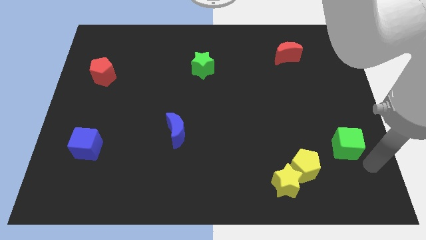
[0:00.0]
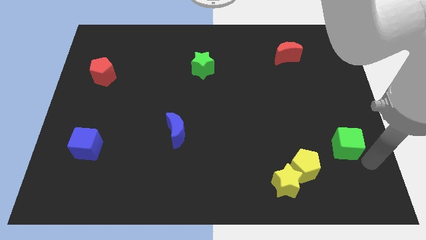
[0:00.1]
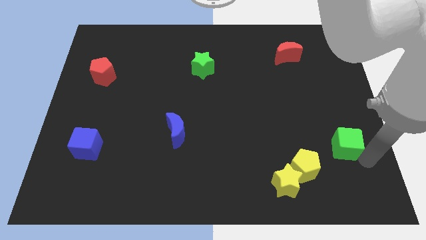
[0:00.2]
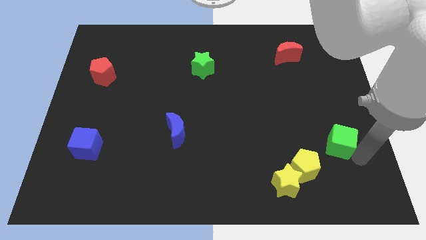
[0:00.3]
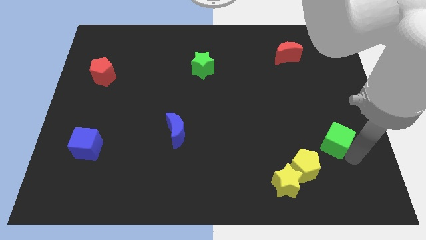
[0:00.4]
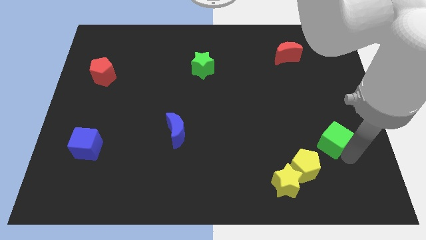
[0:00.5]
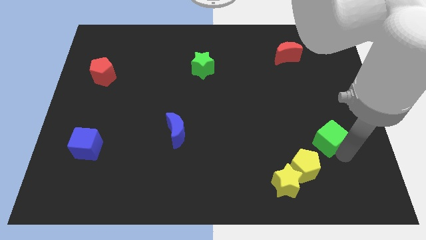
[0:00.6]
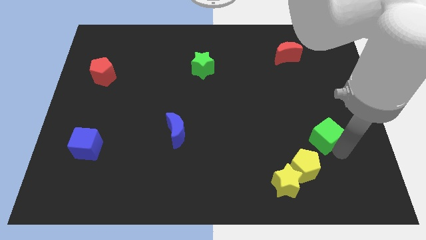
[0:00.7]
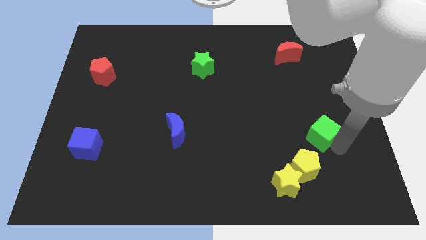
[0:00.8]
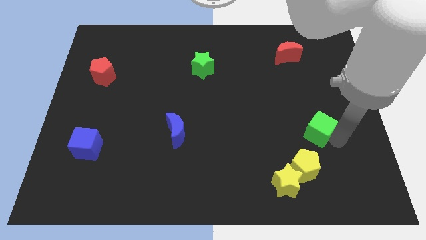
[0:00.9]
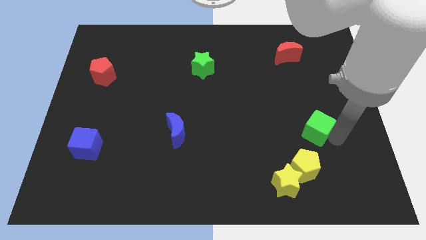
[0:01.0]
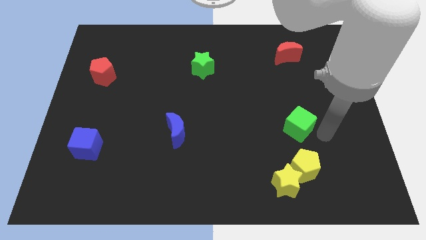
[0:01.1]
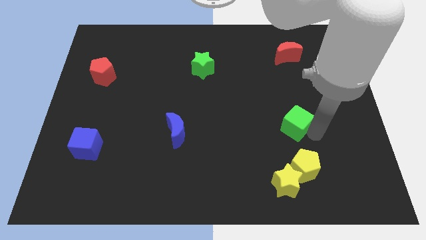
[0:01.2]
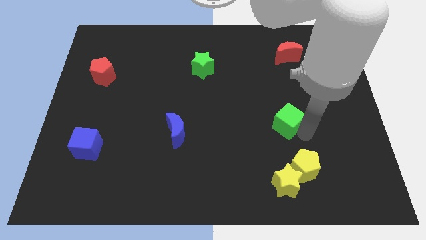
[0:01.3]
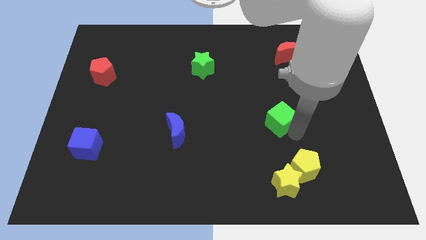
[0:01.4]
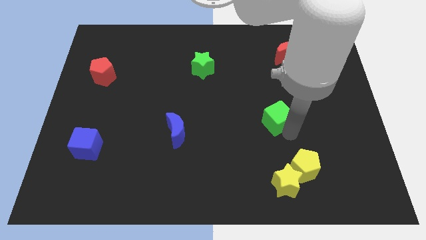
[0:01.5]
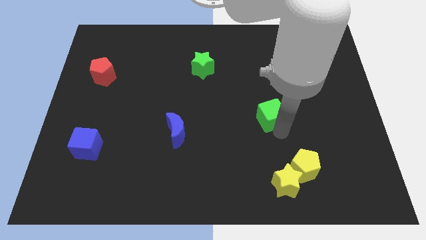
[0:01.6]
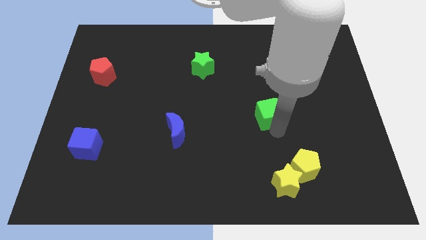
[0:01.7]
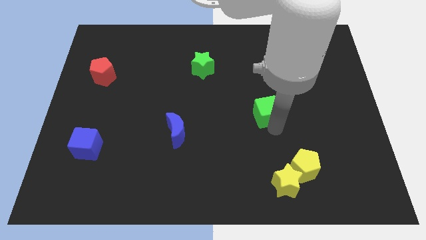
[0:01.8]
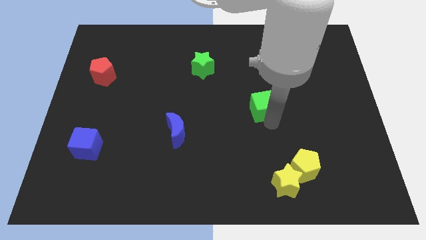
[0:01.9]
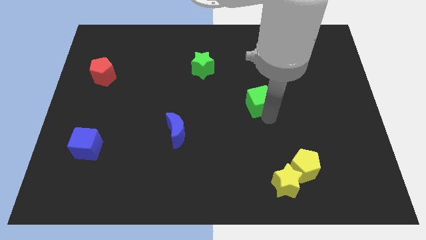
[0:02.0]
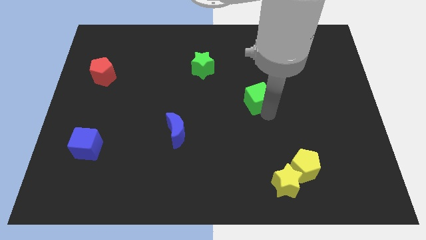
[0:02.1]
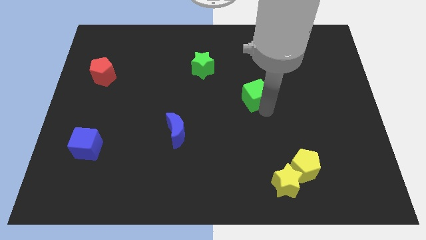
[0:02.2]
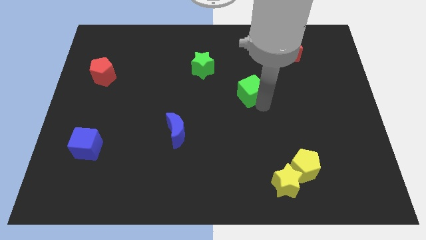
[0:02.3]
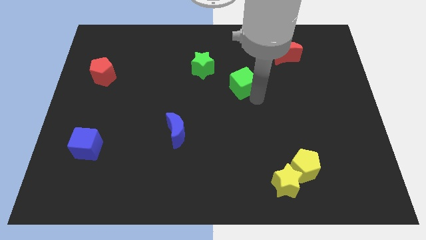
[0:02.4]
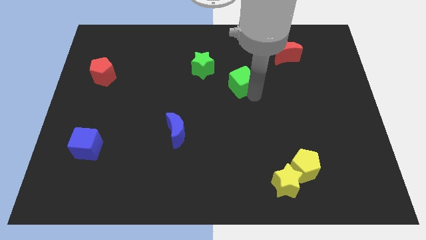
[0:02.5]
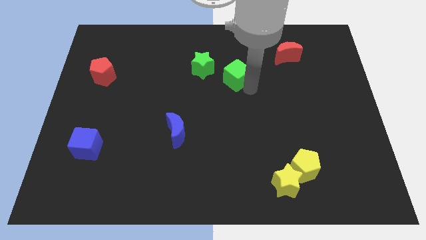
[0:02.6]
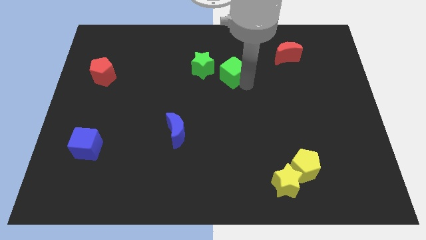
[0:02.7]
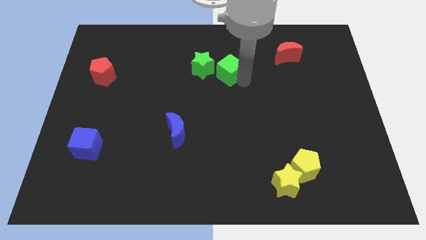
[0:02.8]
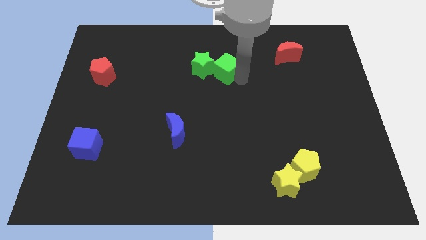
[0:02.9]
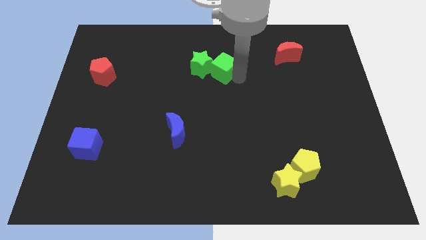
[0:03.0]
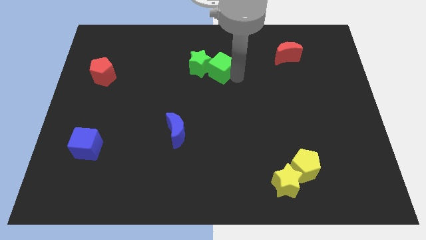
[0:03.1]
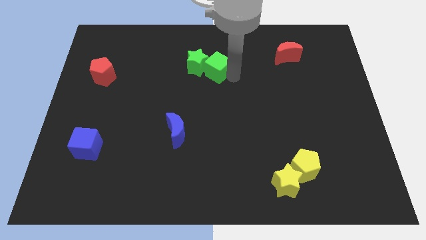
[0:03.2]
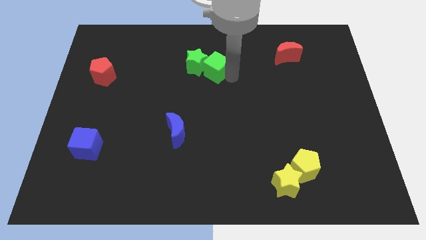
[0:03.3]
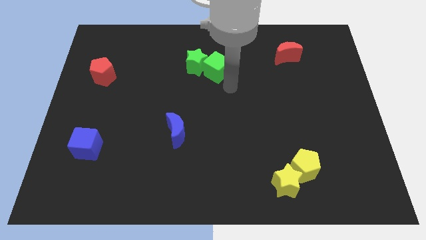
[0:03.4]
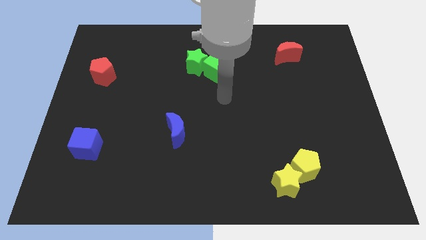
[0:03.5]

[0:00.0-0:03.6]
push the two green blocks at the top center of the table

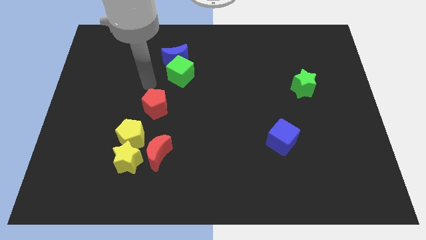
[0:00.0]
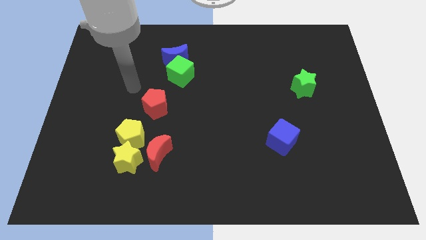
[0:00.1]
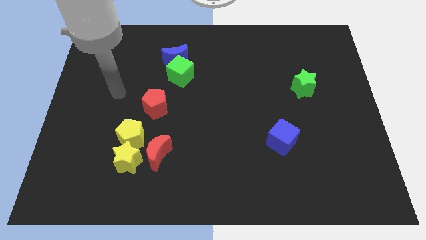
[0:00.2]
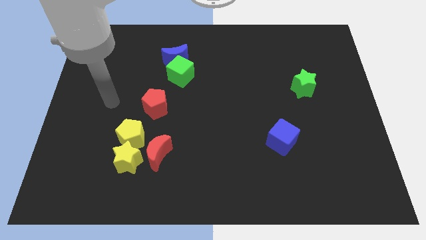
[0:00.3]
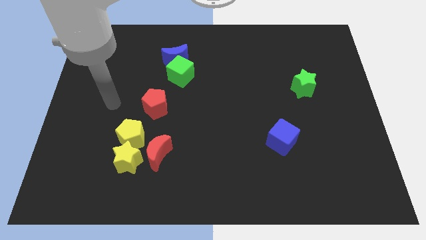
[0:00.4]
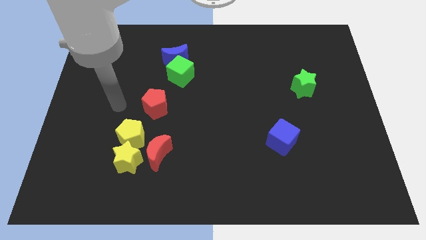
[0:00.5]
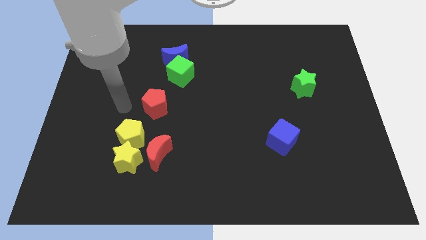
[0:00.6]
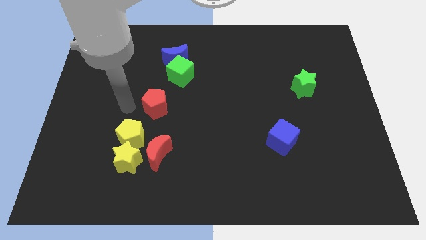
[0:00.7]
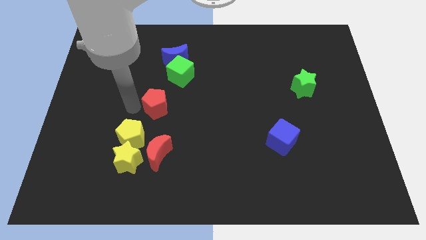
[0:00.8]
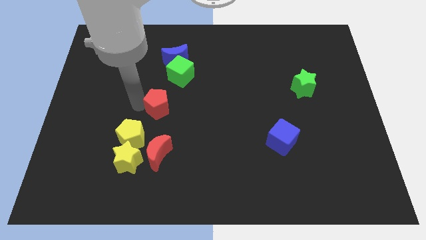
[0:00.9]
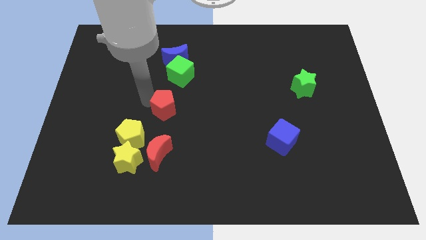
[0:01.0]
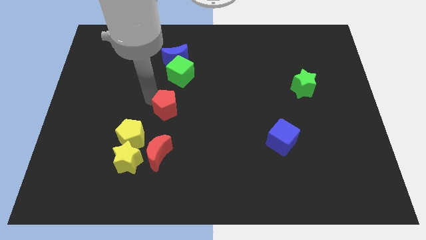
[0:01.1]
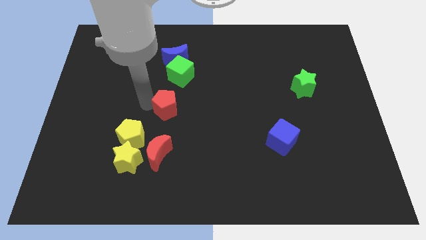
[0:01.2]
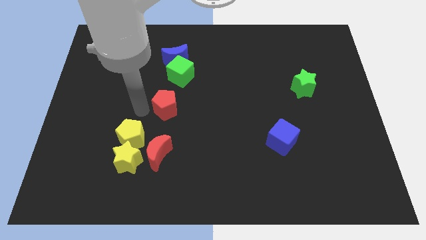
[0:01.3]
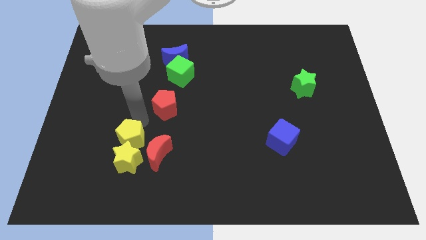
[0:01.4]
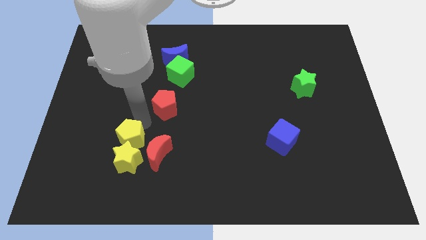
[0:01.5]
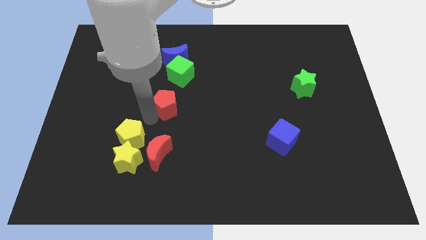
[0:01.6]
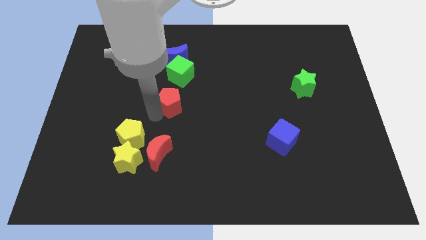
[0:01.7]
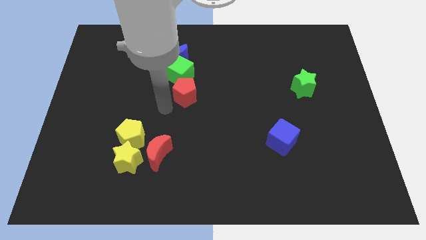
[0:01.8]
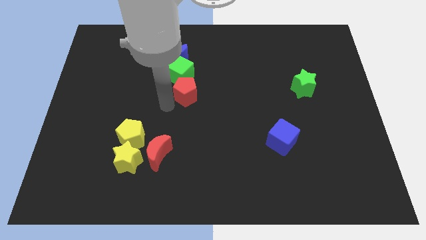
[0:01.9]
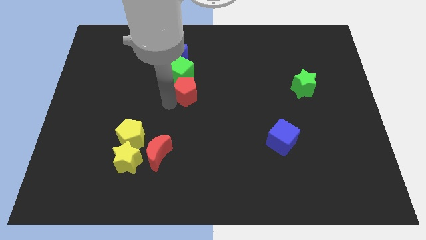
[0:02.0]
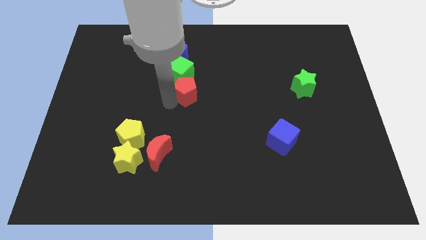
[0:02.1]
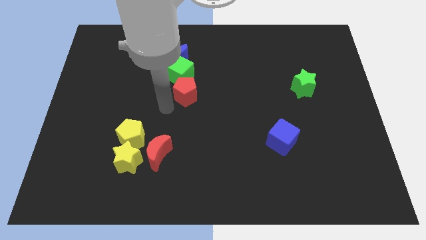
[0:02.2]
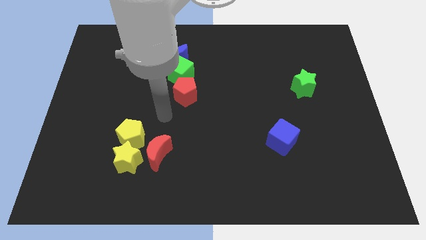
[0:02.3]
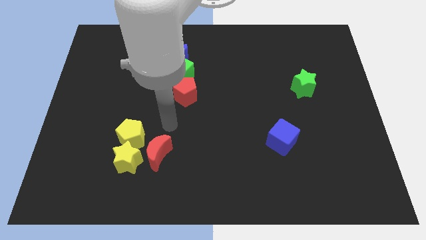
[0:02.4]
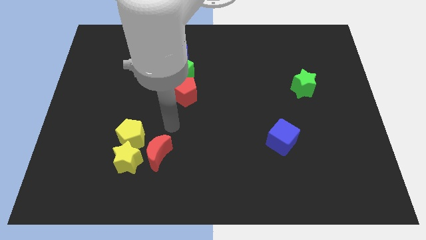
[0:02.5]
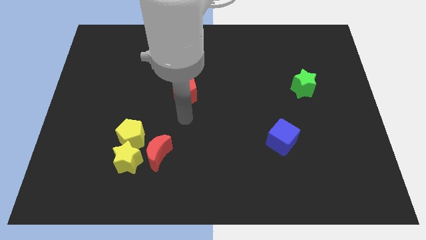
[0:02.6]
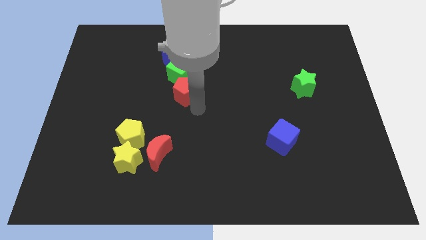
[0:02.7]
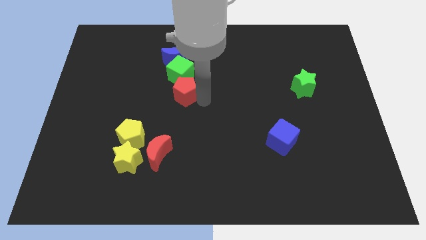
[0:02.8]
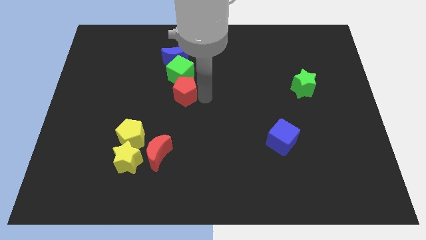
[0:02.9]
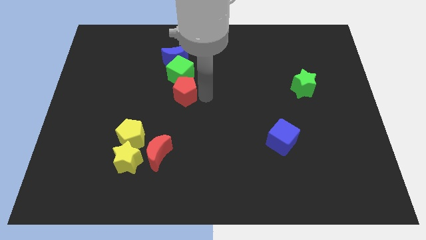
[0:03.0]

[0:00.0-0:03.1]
place the red pentagon under the green cube

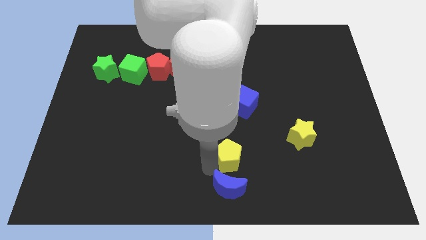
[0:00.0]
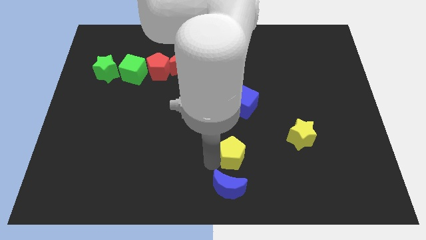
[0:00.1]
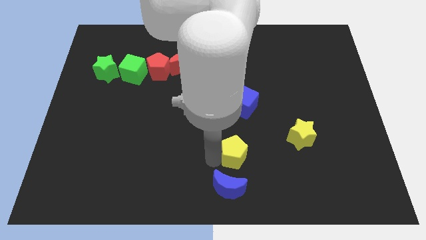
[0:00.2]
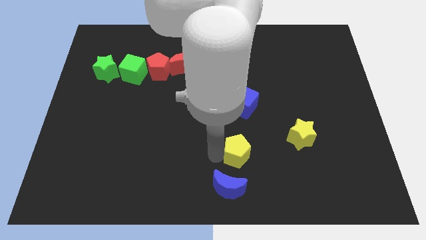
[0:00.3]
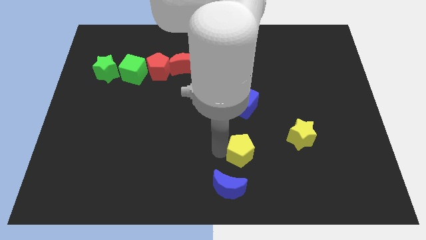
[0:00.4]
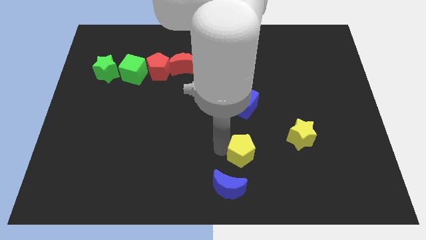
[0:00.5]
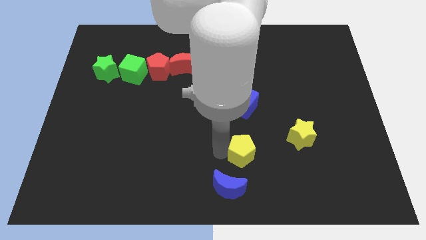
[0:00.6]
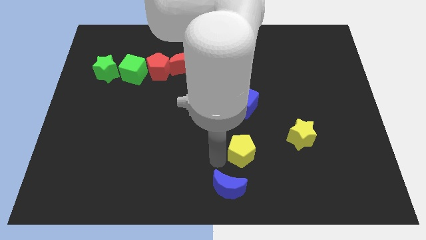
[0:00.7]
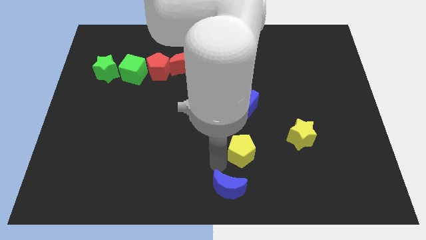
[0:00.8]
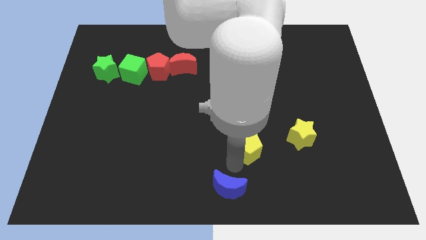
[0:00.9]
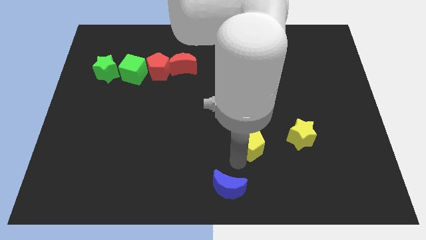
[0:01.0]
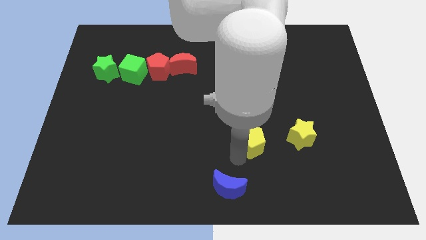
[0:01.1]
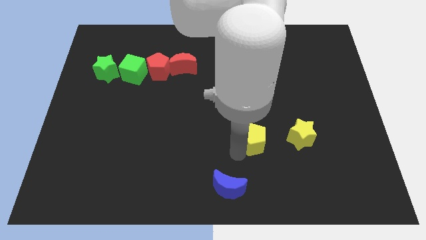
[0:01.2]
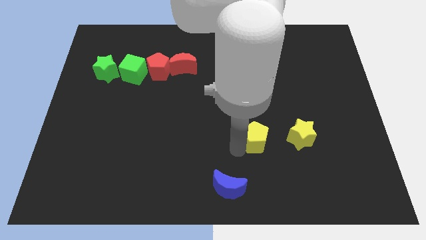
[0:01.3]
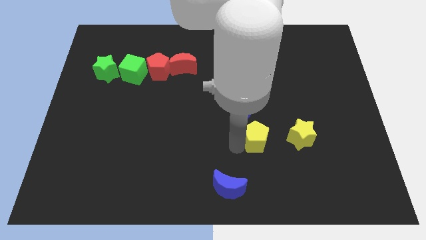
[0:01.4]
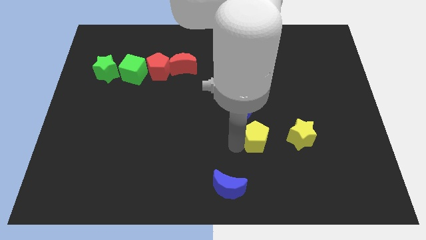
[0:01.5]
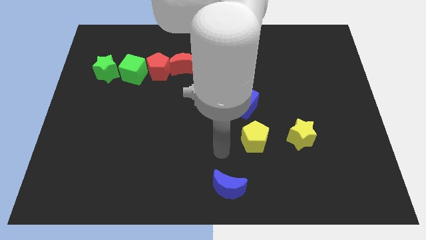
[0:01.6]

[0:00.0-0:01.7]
push the yellow pentagon to the left of the yellow star

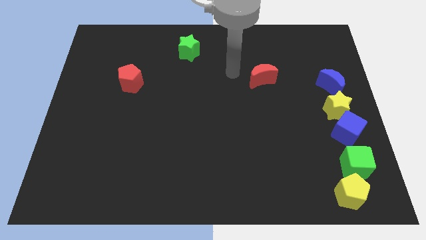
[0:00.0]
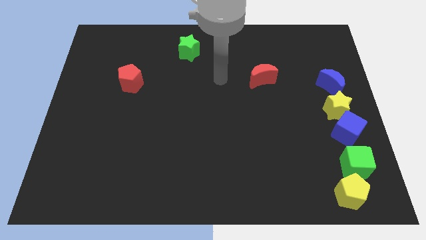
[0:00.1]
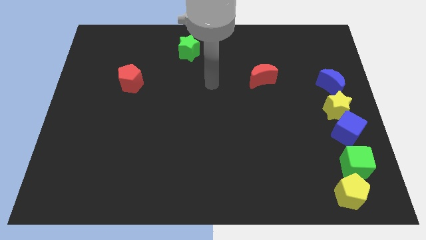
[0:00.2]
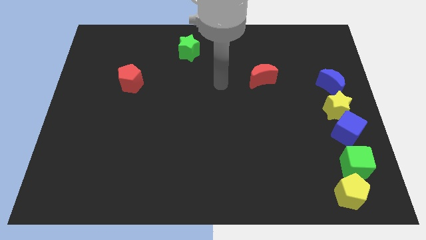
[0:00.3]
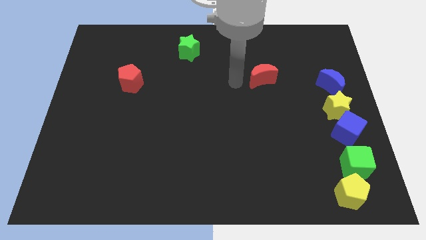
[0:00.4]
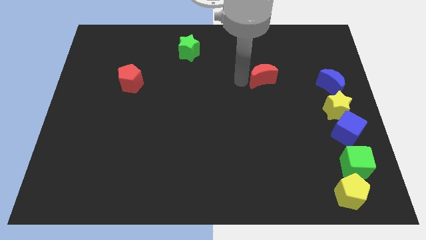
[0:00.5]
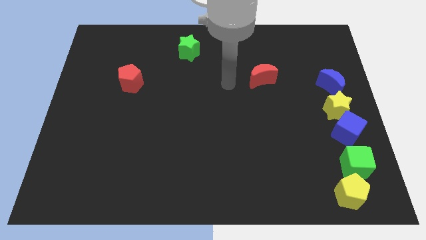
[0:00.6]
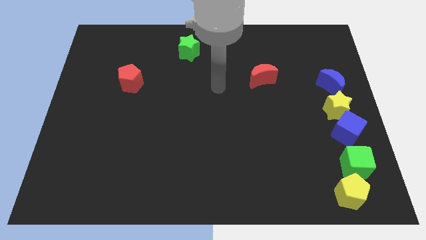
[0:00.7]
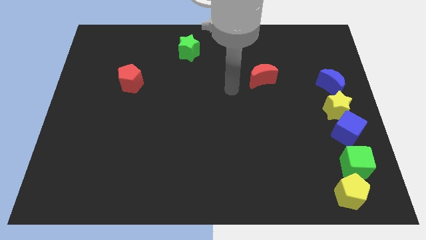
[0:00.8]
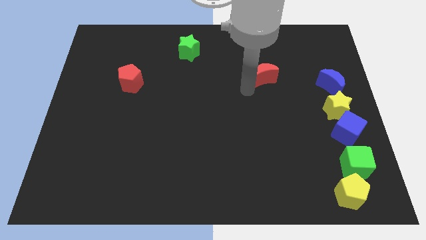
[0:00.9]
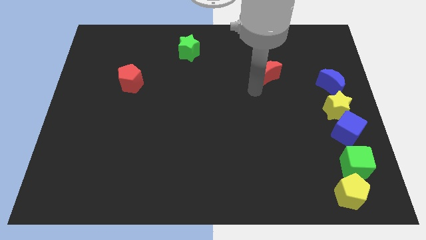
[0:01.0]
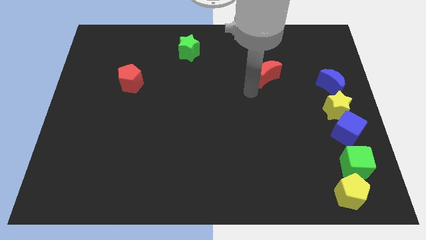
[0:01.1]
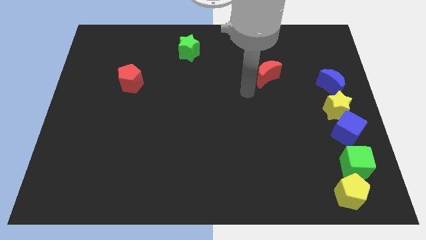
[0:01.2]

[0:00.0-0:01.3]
push the red crescent slightly to the top right
